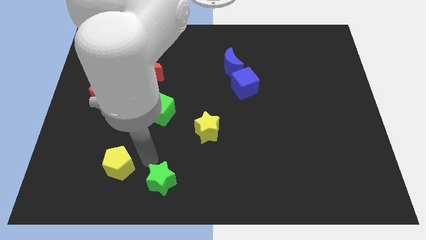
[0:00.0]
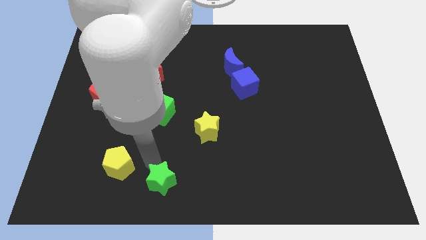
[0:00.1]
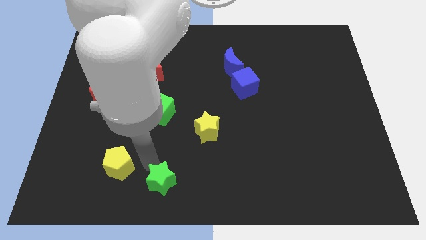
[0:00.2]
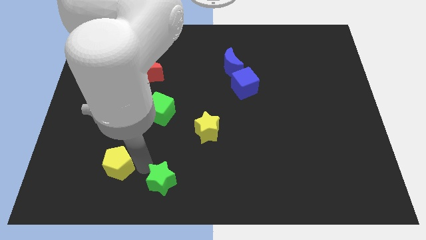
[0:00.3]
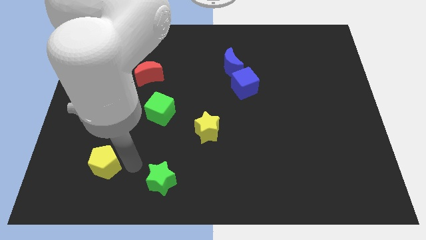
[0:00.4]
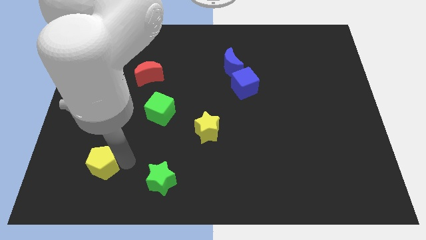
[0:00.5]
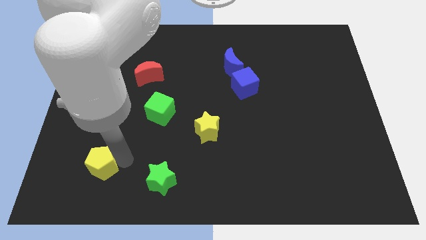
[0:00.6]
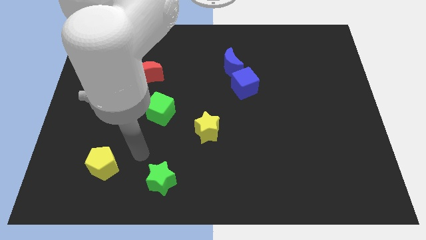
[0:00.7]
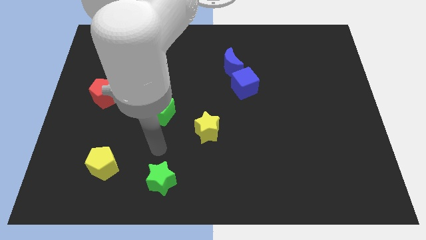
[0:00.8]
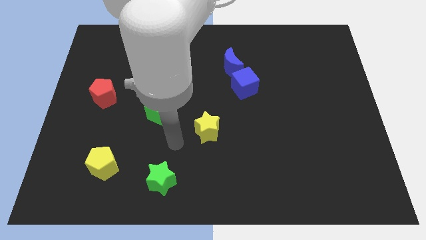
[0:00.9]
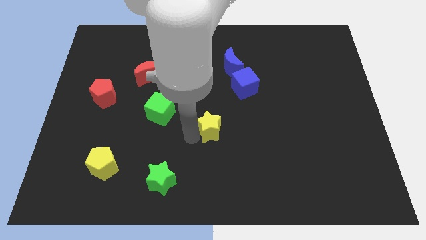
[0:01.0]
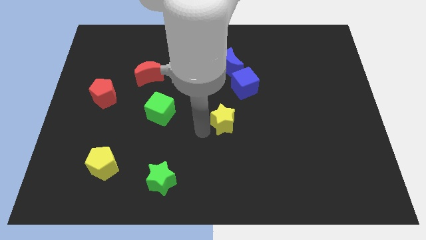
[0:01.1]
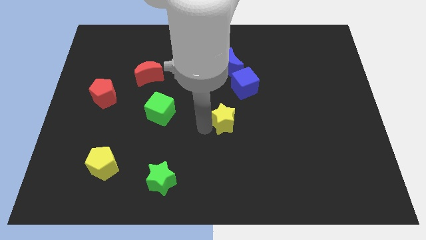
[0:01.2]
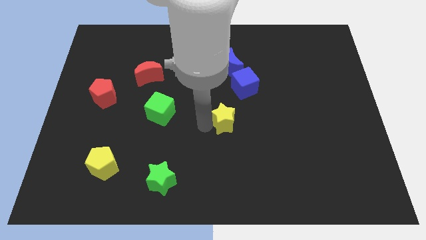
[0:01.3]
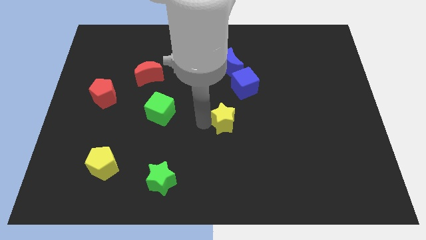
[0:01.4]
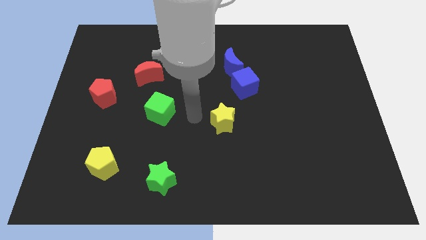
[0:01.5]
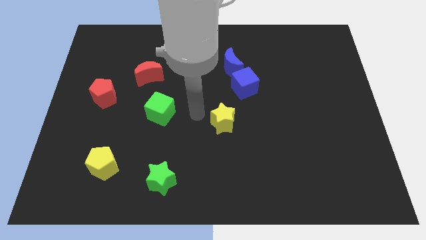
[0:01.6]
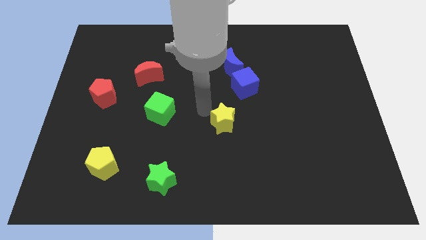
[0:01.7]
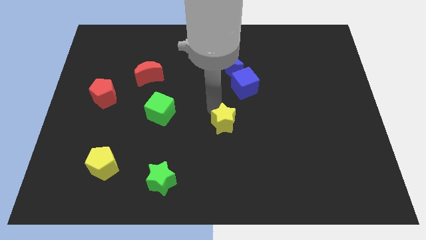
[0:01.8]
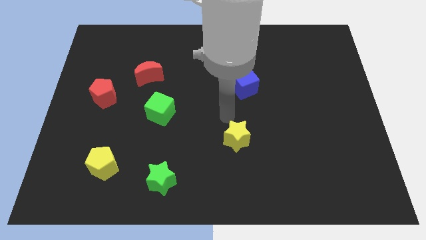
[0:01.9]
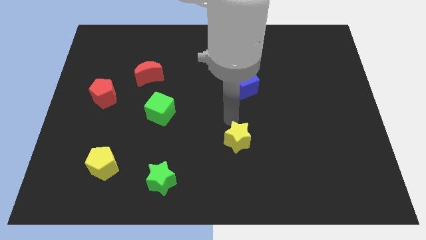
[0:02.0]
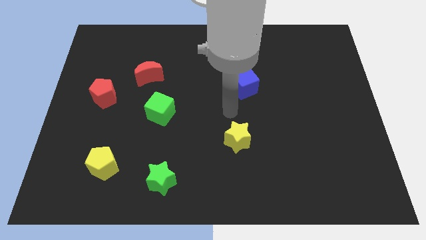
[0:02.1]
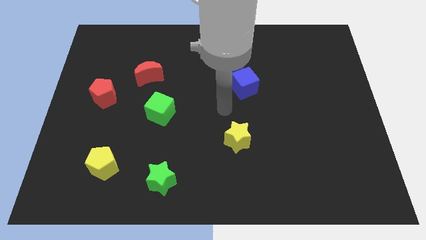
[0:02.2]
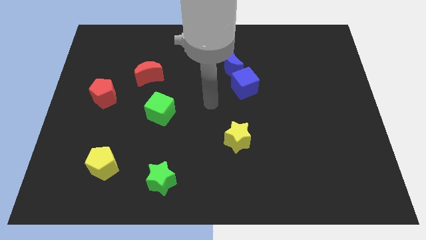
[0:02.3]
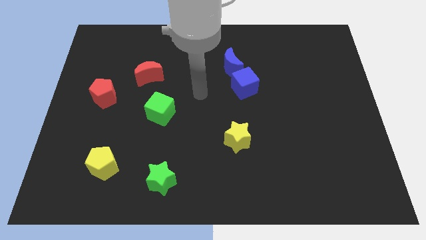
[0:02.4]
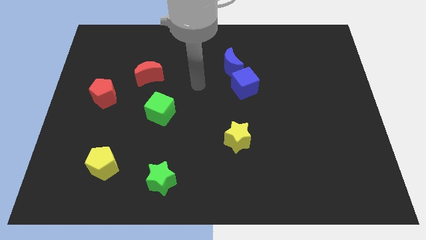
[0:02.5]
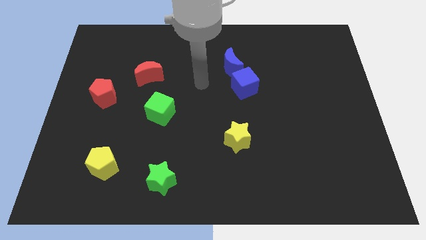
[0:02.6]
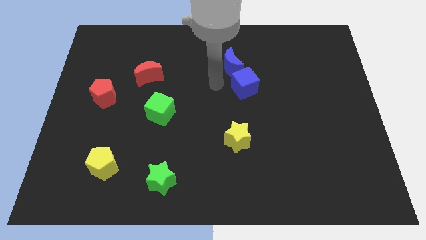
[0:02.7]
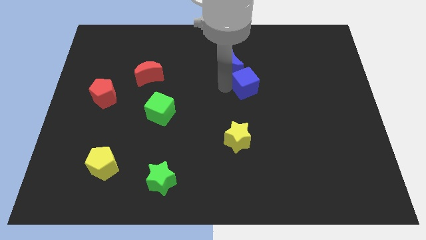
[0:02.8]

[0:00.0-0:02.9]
push the yellow star slightly to its right

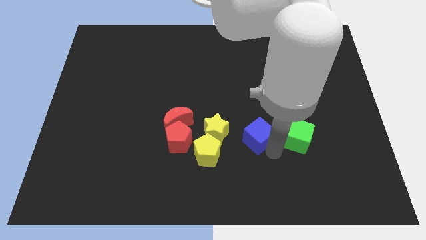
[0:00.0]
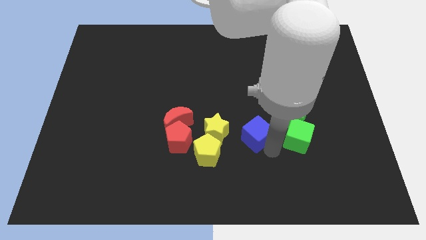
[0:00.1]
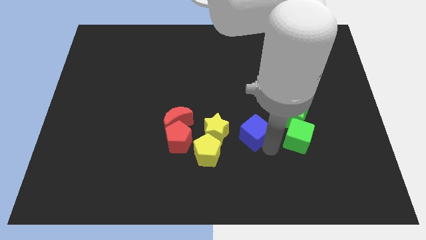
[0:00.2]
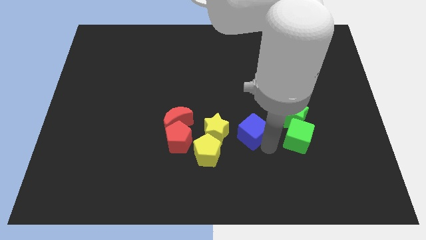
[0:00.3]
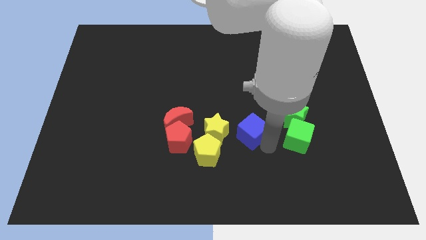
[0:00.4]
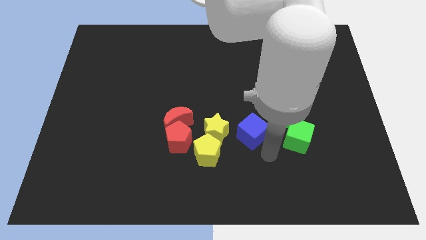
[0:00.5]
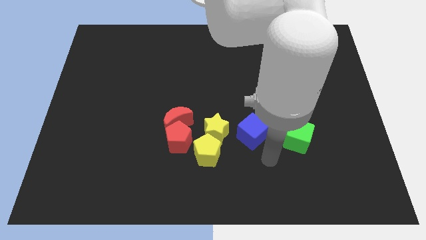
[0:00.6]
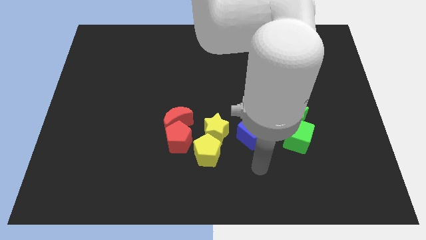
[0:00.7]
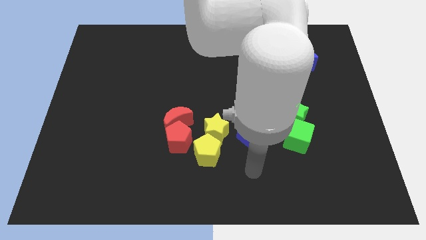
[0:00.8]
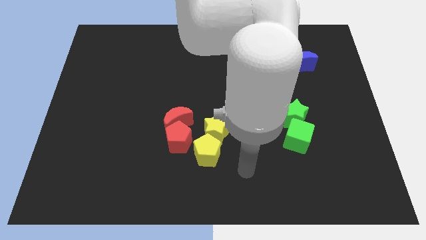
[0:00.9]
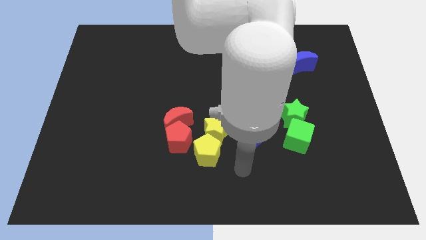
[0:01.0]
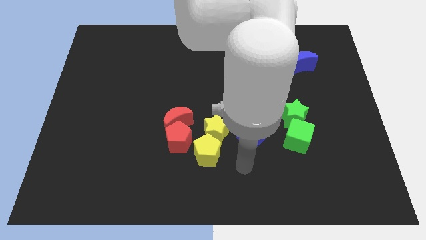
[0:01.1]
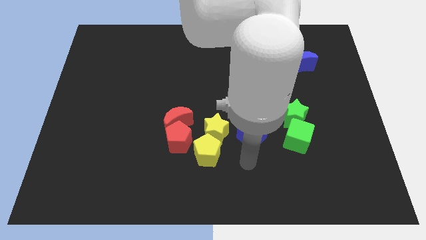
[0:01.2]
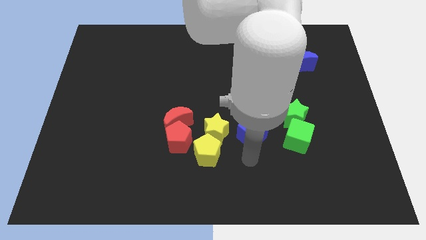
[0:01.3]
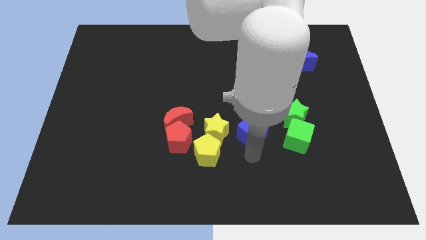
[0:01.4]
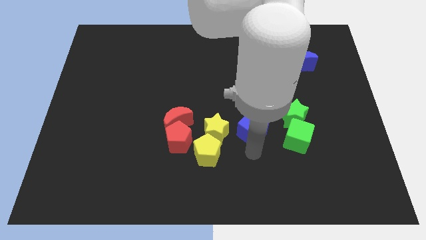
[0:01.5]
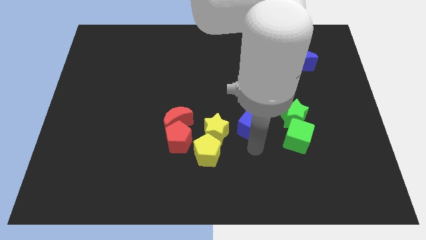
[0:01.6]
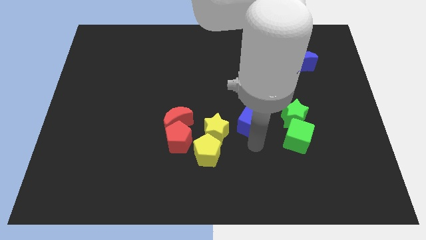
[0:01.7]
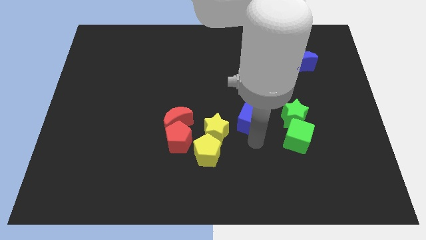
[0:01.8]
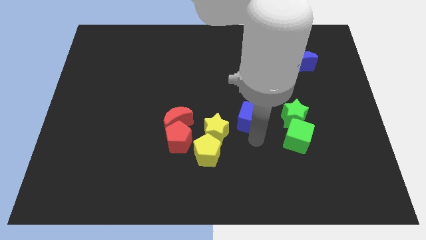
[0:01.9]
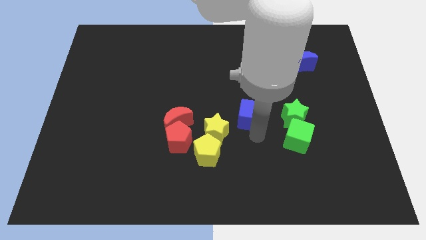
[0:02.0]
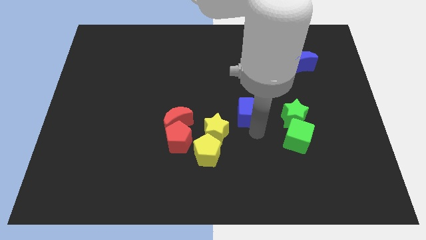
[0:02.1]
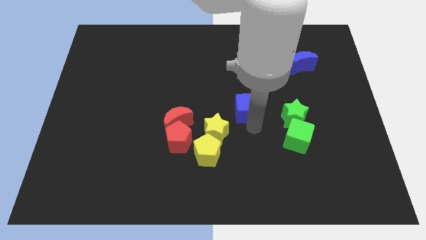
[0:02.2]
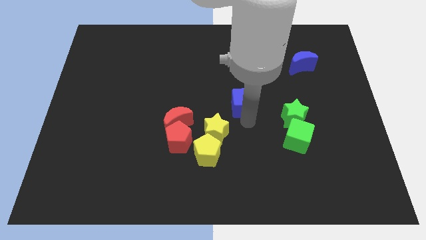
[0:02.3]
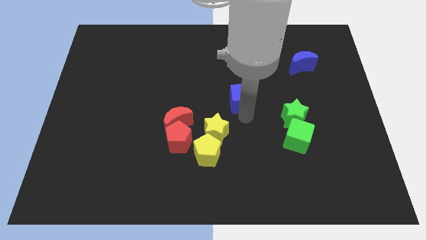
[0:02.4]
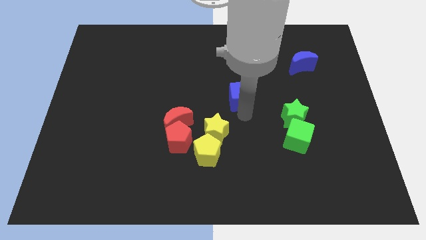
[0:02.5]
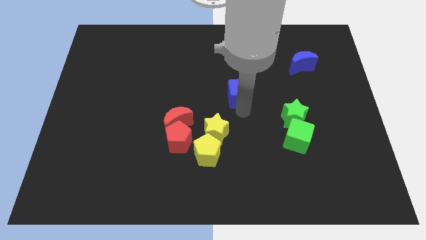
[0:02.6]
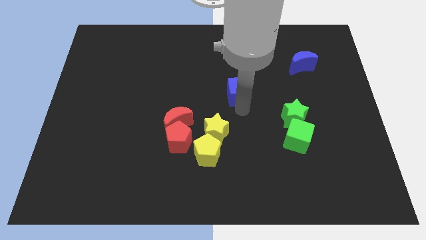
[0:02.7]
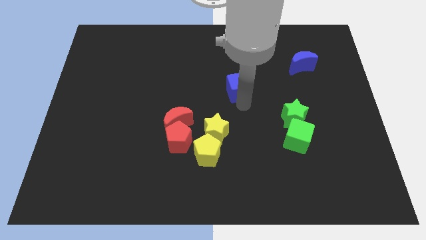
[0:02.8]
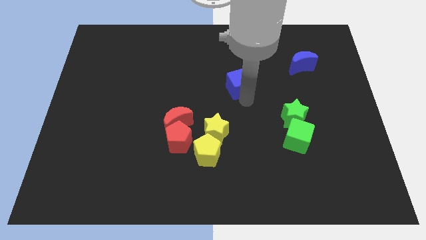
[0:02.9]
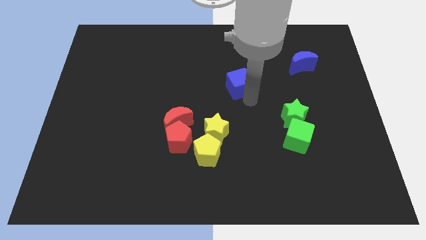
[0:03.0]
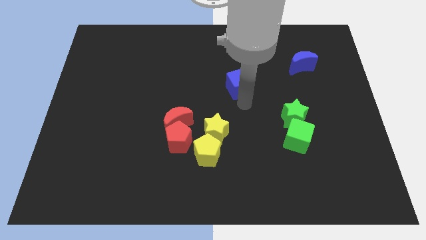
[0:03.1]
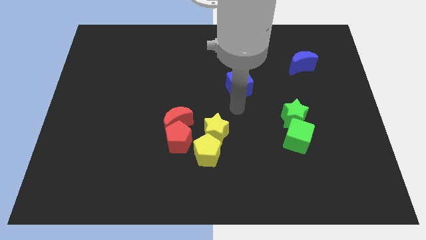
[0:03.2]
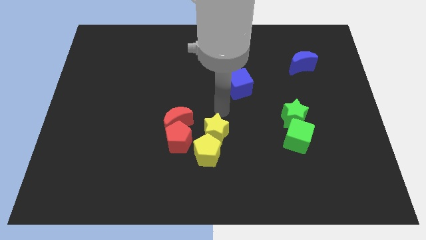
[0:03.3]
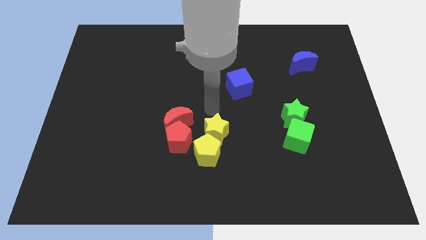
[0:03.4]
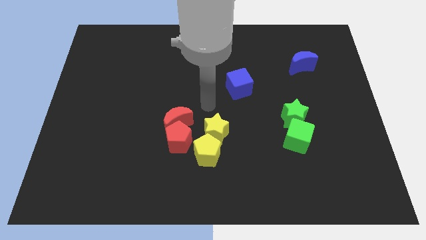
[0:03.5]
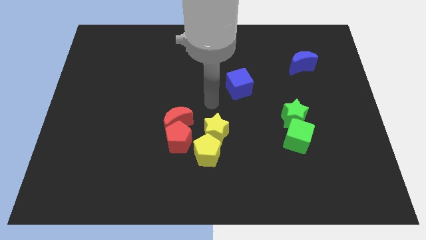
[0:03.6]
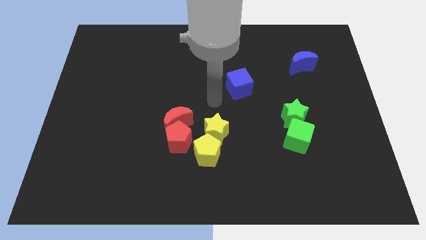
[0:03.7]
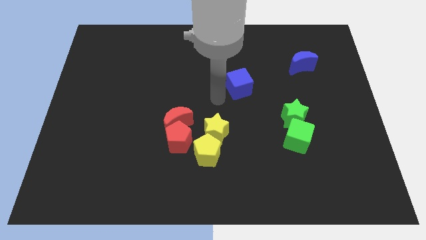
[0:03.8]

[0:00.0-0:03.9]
slide the blue cube diagonally top right to yellow star

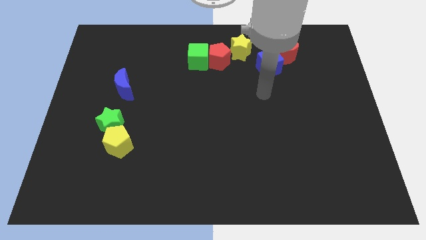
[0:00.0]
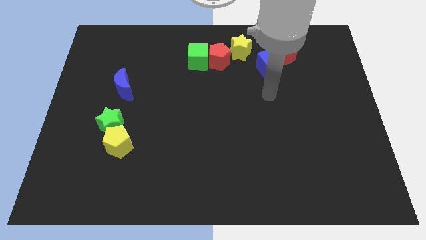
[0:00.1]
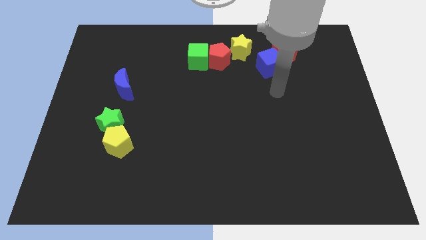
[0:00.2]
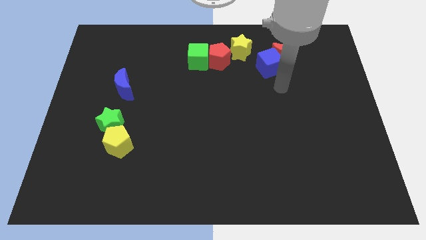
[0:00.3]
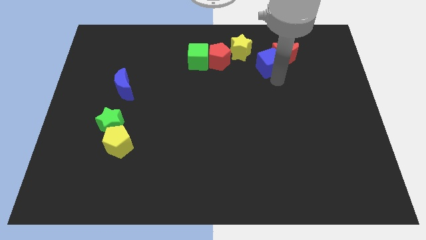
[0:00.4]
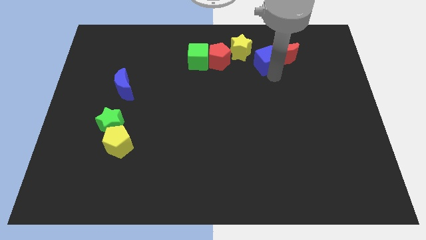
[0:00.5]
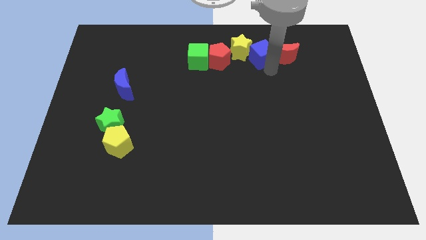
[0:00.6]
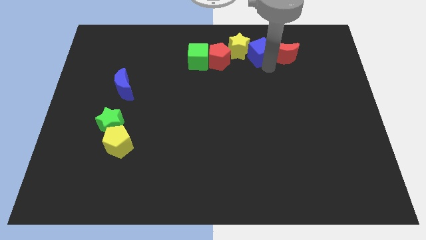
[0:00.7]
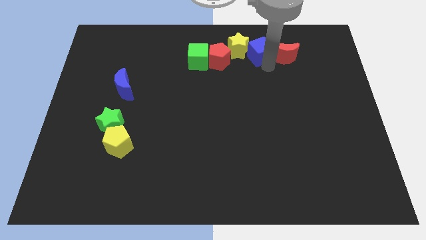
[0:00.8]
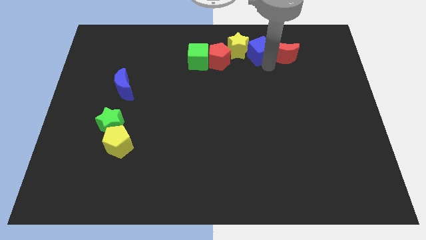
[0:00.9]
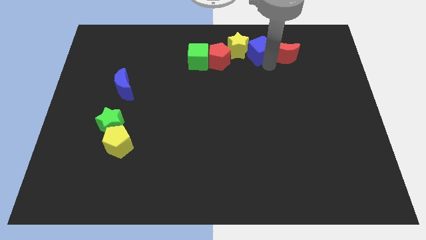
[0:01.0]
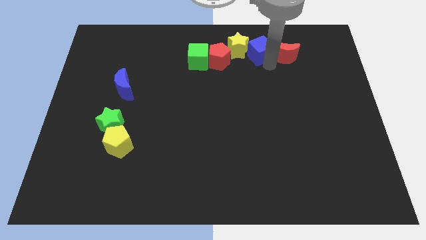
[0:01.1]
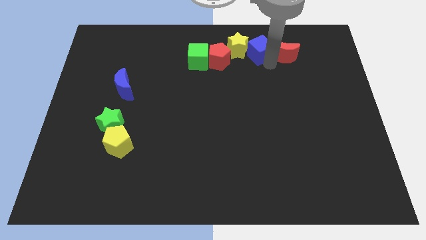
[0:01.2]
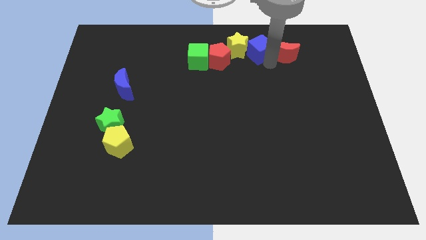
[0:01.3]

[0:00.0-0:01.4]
move blue cube into the yellow star

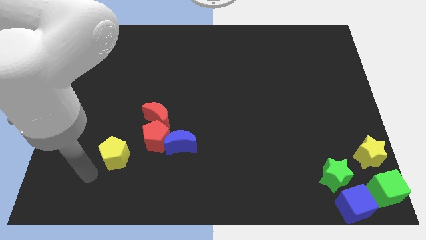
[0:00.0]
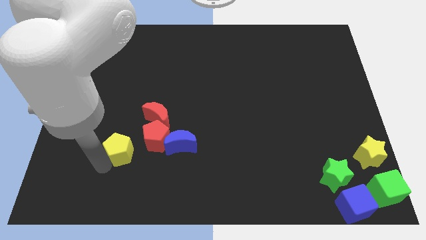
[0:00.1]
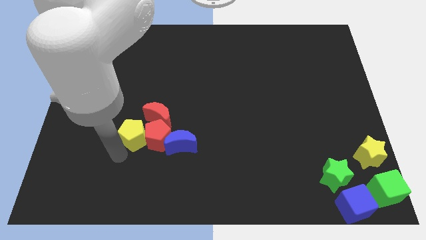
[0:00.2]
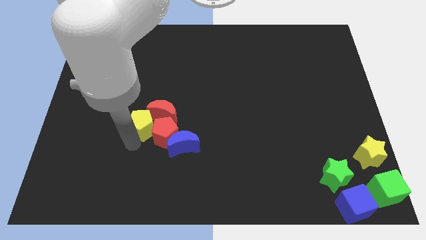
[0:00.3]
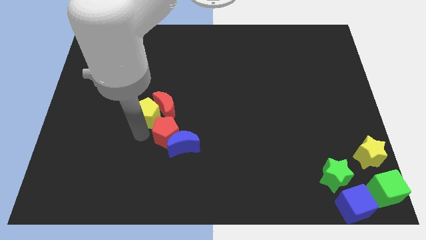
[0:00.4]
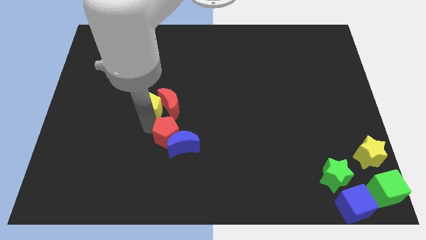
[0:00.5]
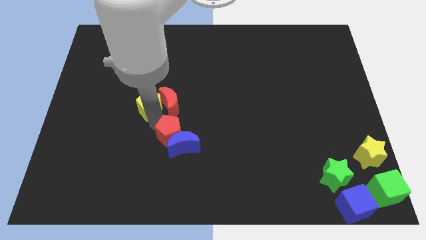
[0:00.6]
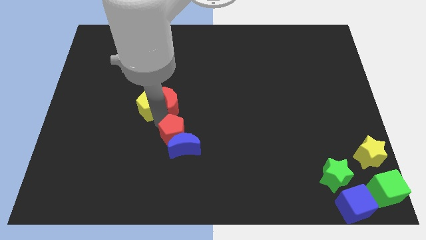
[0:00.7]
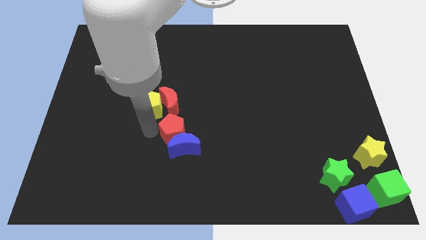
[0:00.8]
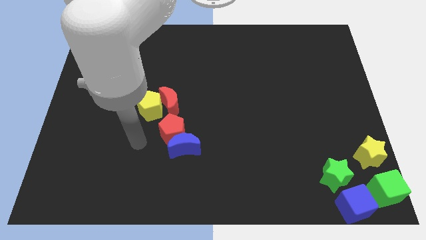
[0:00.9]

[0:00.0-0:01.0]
push the yellow pentagon into red crescent
